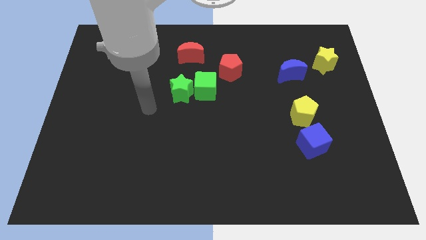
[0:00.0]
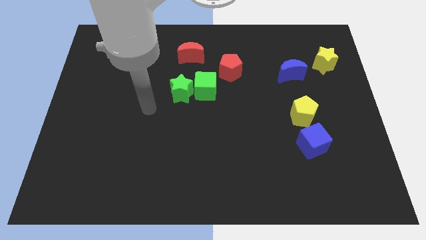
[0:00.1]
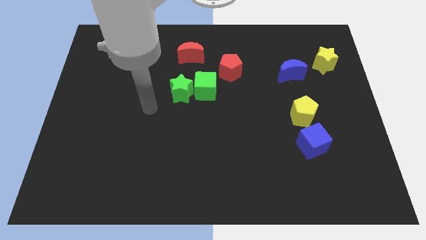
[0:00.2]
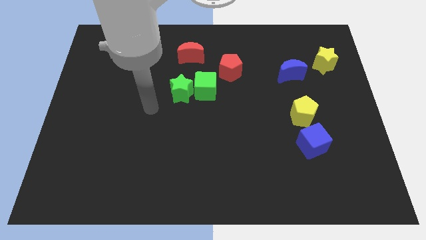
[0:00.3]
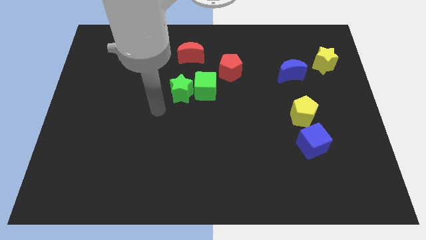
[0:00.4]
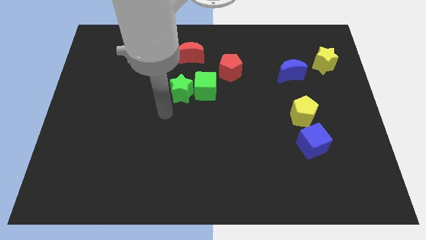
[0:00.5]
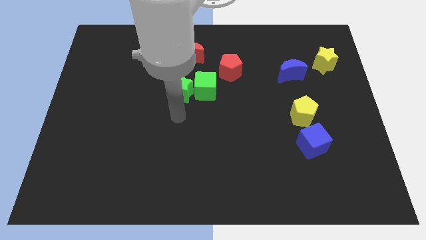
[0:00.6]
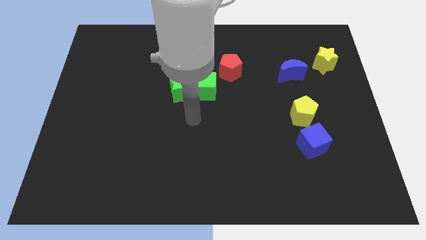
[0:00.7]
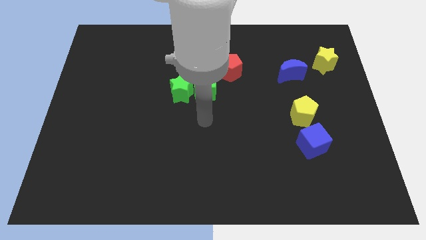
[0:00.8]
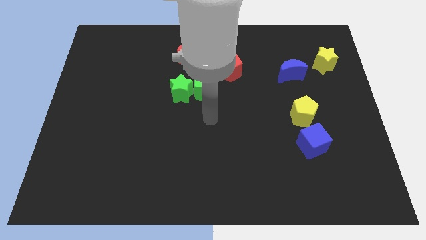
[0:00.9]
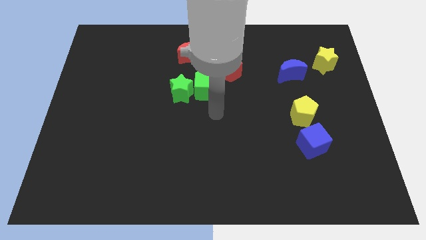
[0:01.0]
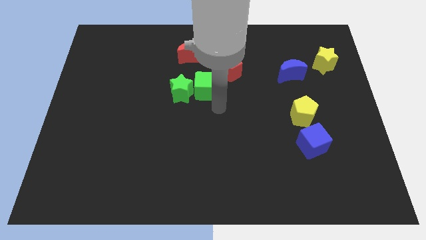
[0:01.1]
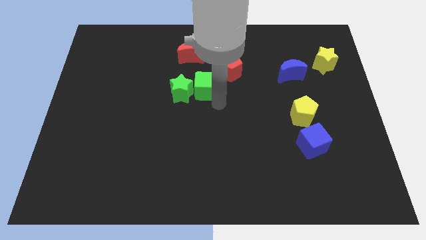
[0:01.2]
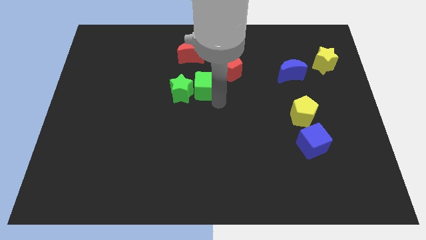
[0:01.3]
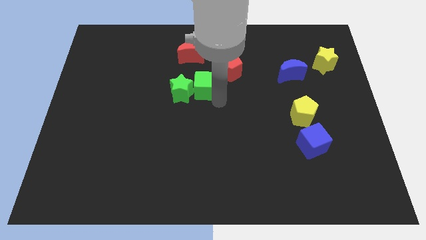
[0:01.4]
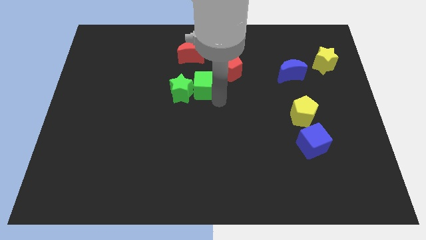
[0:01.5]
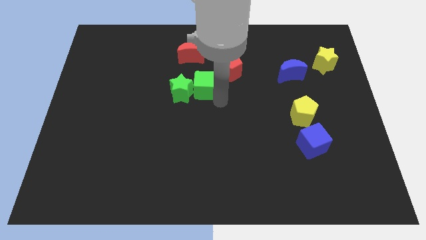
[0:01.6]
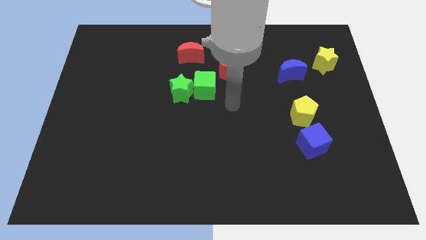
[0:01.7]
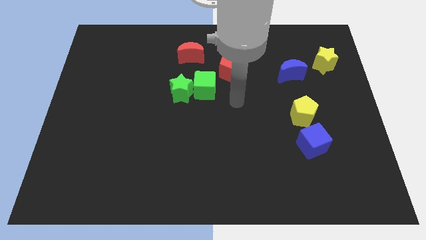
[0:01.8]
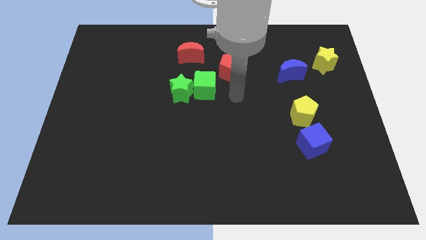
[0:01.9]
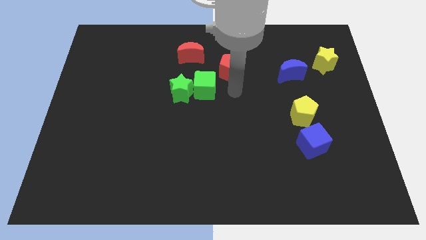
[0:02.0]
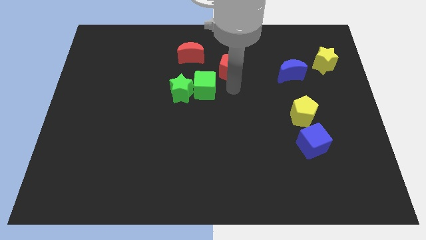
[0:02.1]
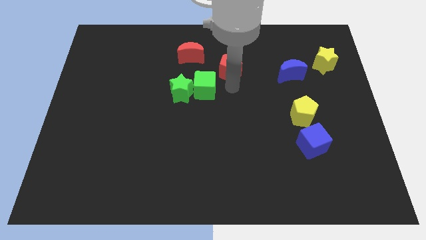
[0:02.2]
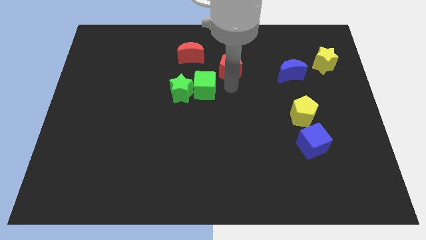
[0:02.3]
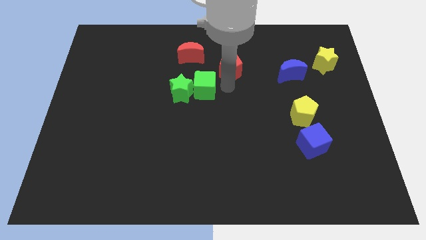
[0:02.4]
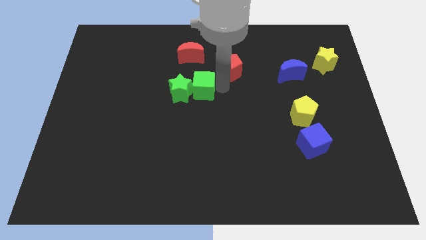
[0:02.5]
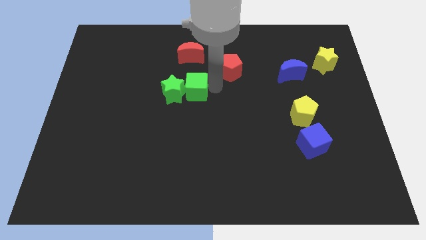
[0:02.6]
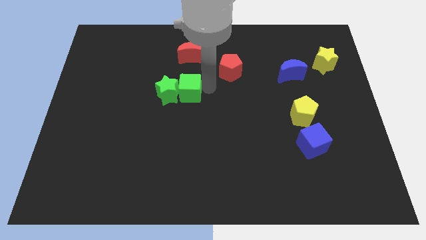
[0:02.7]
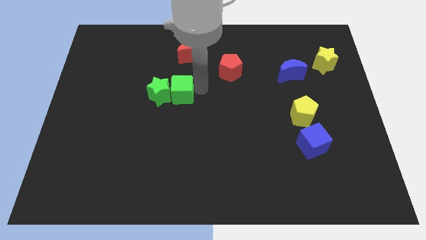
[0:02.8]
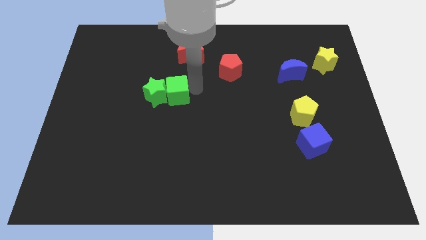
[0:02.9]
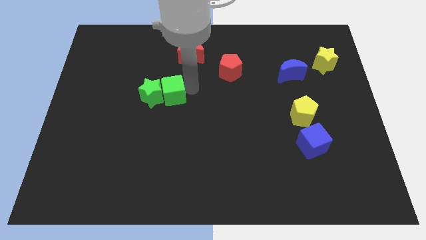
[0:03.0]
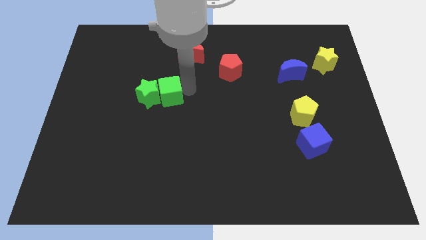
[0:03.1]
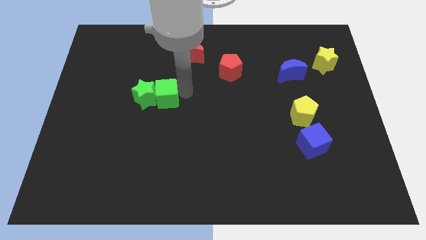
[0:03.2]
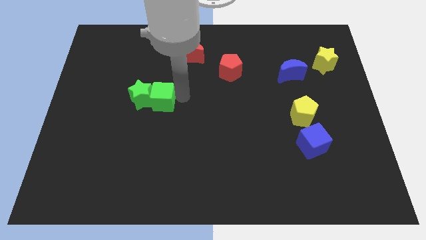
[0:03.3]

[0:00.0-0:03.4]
move green blocks slightly towards center left

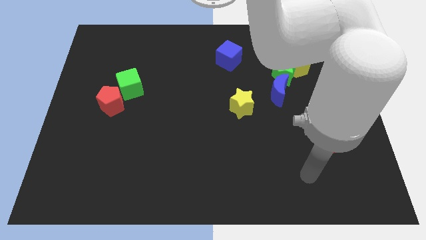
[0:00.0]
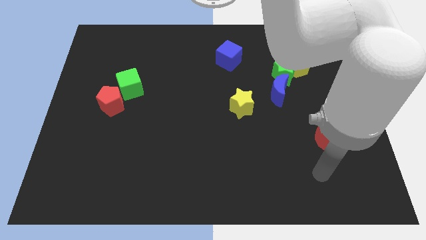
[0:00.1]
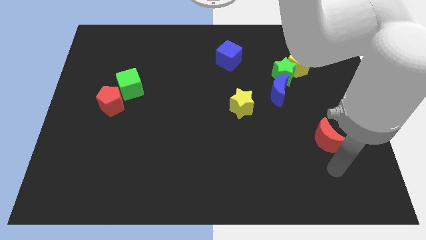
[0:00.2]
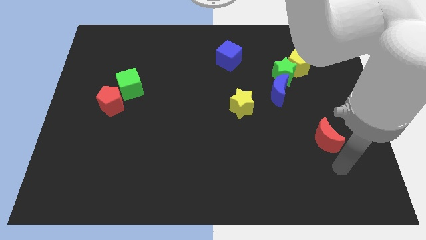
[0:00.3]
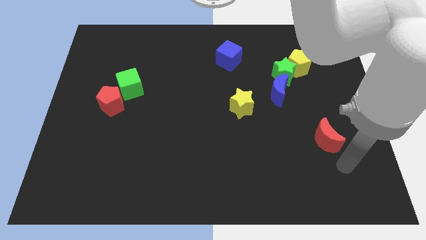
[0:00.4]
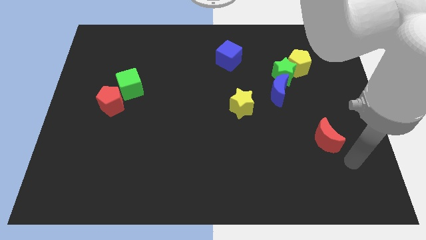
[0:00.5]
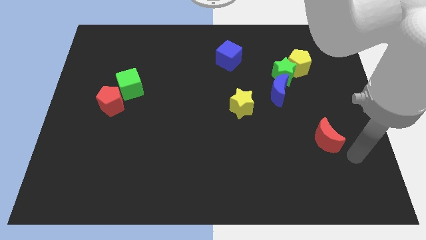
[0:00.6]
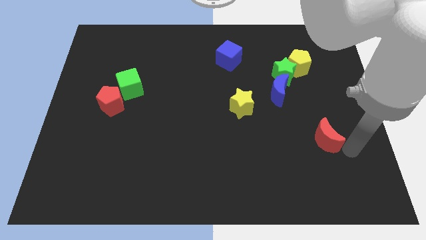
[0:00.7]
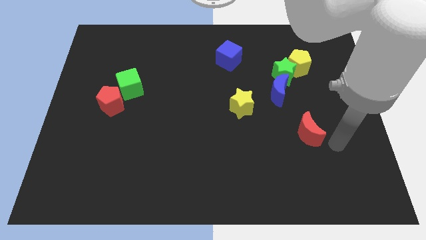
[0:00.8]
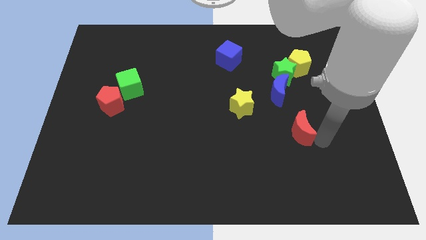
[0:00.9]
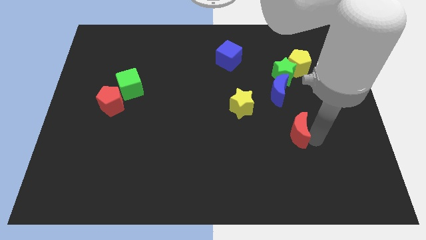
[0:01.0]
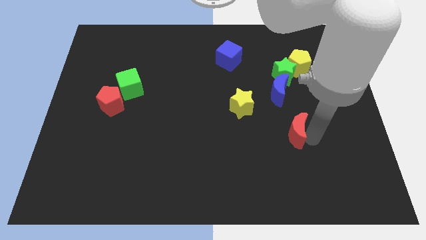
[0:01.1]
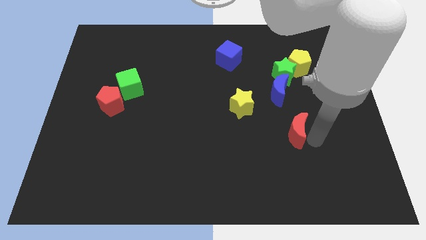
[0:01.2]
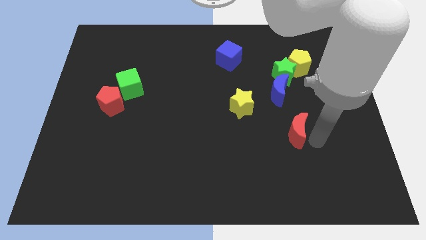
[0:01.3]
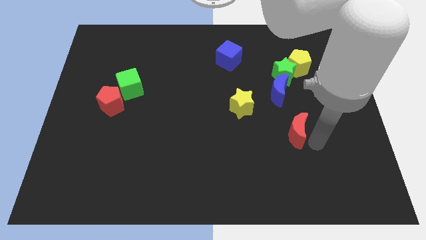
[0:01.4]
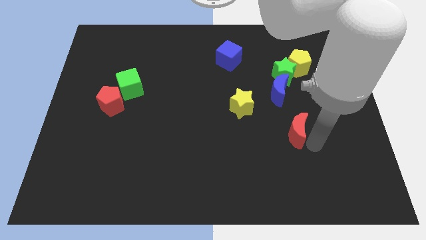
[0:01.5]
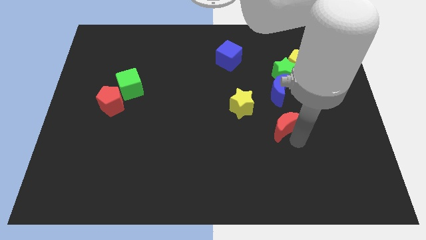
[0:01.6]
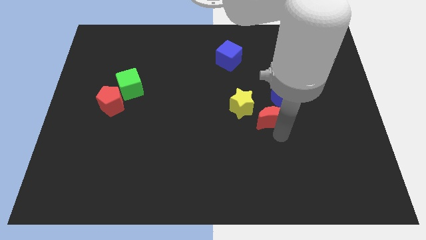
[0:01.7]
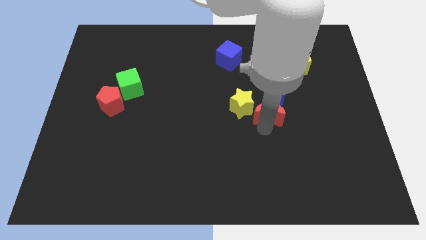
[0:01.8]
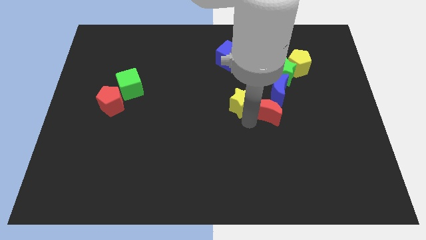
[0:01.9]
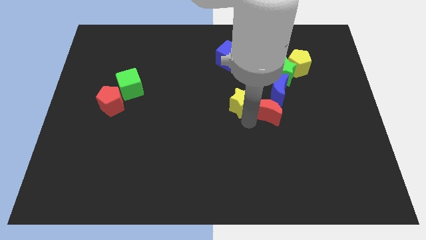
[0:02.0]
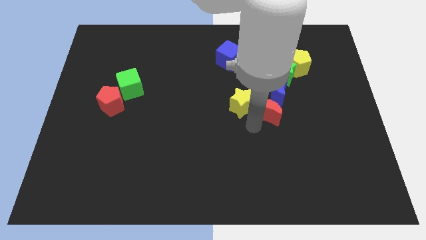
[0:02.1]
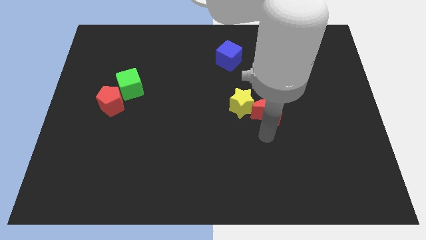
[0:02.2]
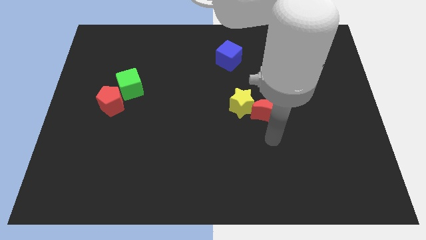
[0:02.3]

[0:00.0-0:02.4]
move red moon right into the yellow star

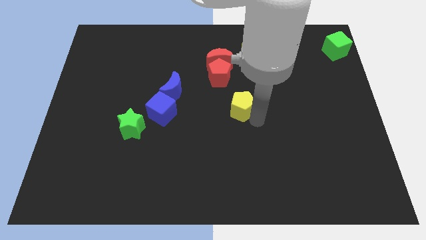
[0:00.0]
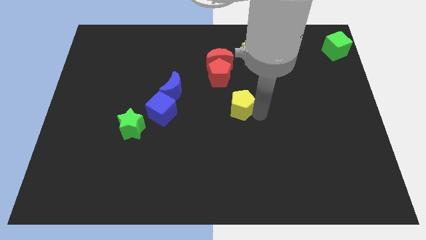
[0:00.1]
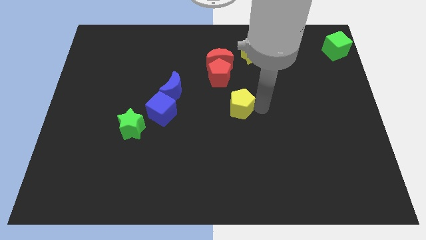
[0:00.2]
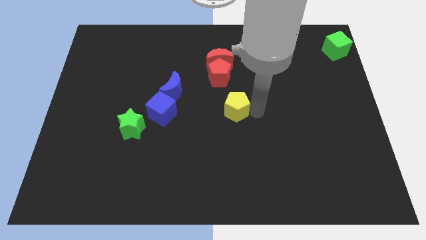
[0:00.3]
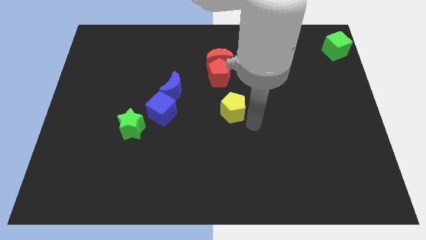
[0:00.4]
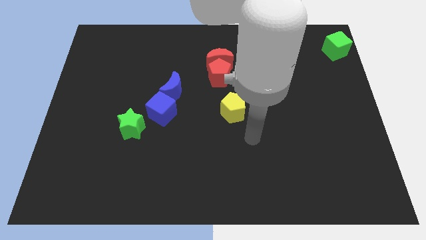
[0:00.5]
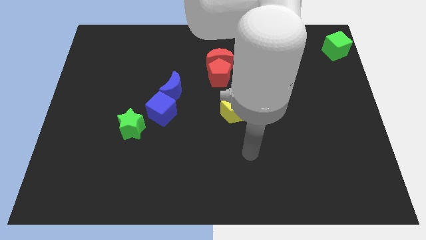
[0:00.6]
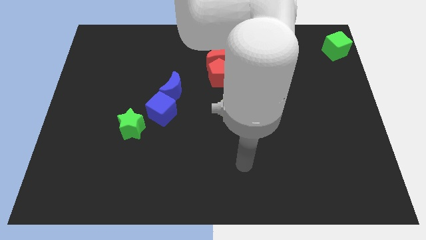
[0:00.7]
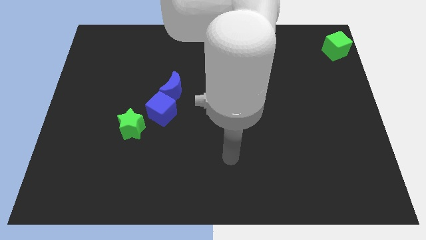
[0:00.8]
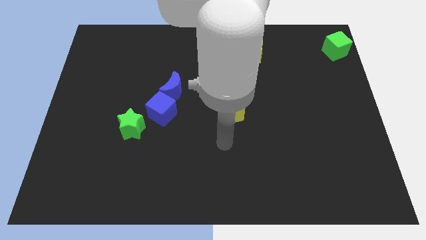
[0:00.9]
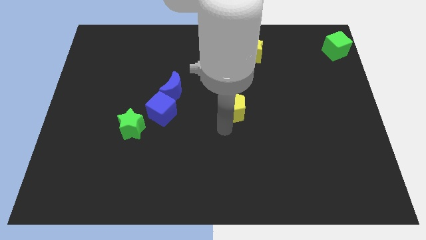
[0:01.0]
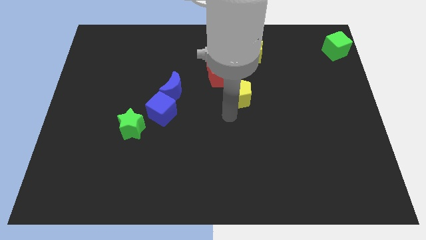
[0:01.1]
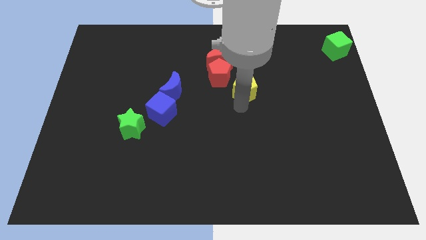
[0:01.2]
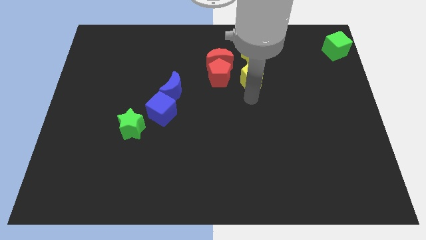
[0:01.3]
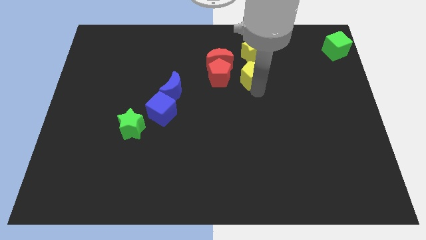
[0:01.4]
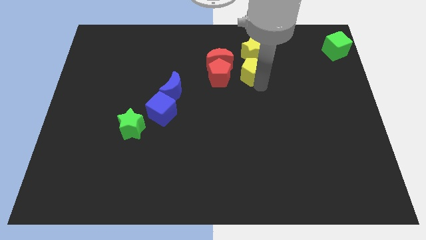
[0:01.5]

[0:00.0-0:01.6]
place the yellow pentagon below the yellow star

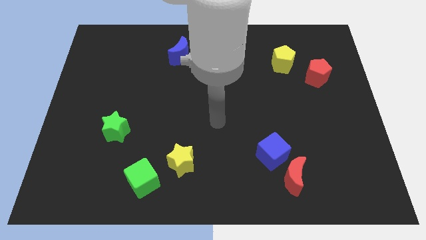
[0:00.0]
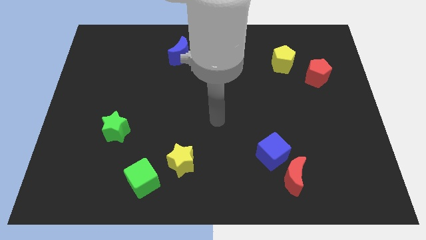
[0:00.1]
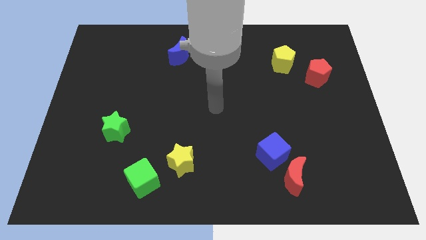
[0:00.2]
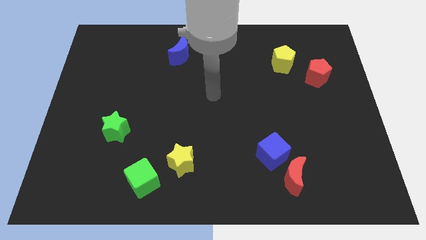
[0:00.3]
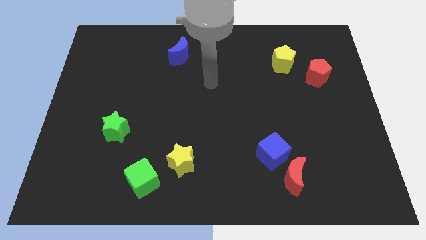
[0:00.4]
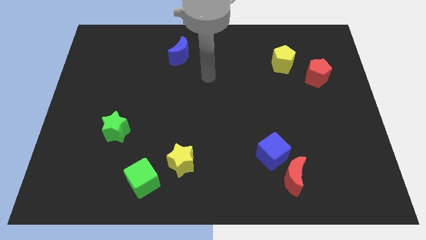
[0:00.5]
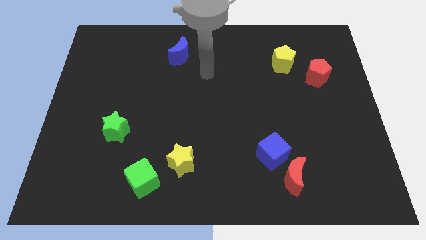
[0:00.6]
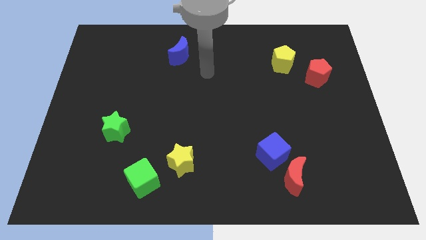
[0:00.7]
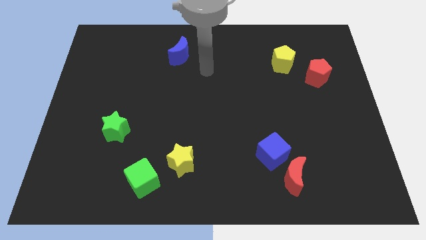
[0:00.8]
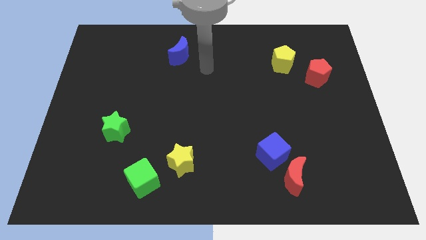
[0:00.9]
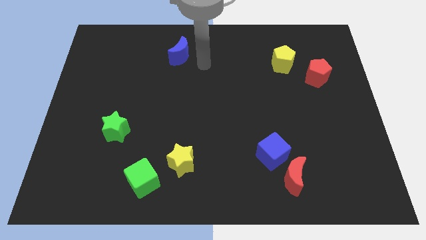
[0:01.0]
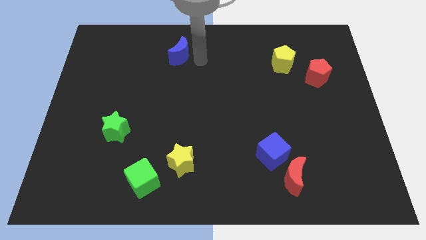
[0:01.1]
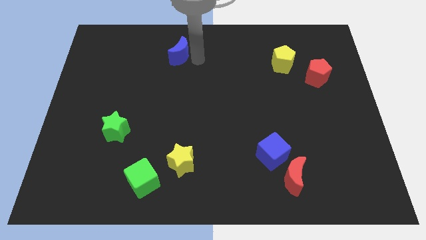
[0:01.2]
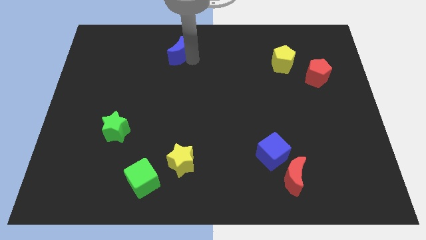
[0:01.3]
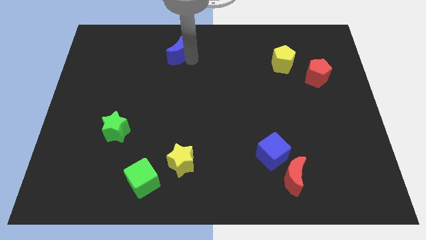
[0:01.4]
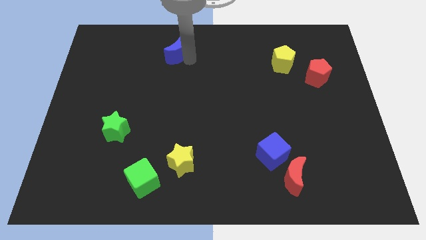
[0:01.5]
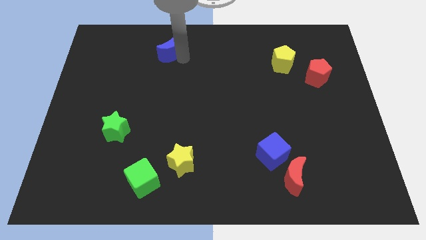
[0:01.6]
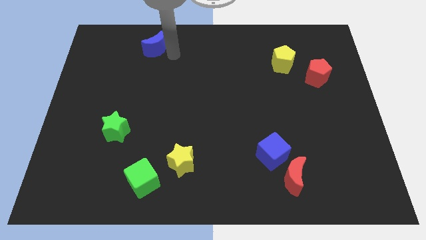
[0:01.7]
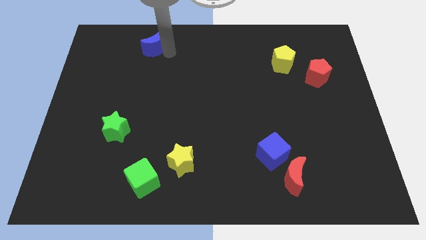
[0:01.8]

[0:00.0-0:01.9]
slightly move the blue moon to the left side
